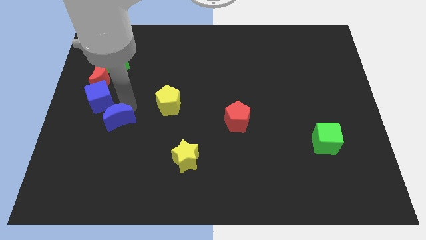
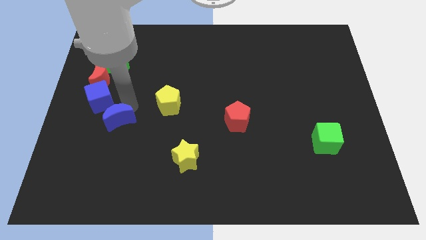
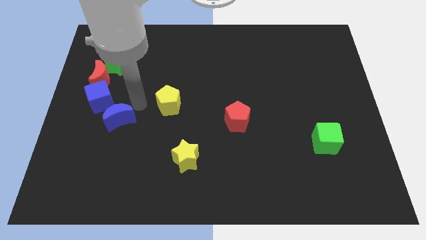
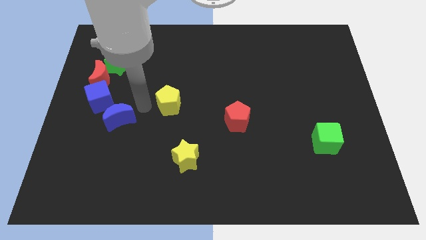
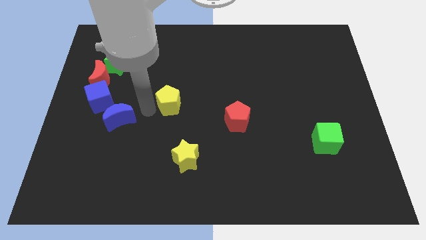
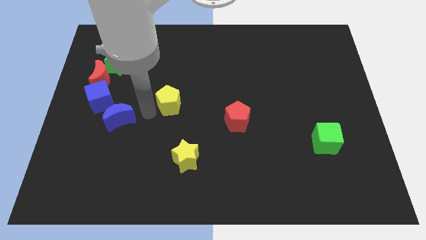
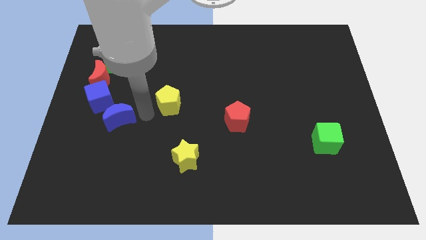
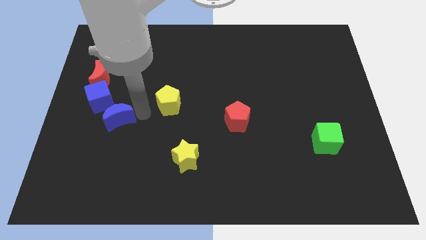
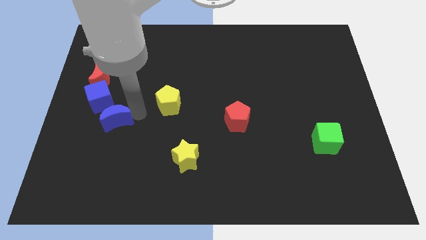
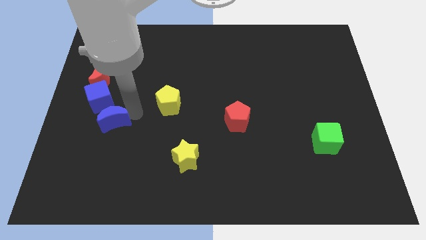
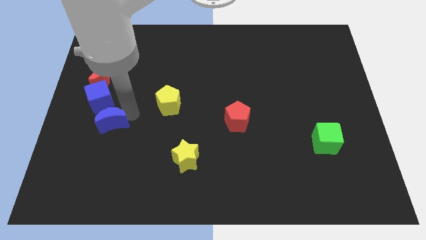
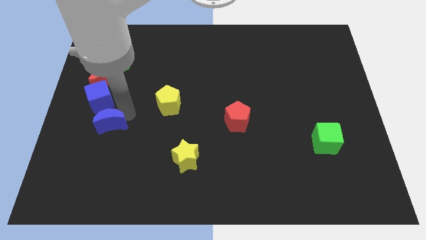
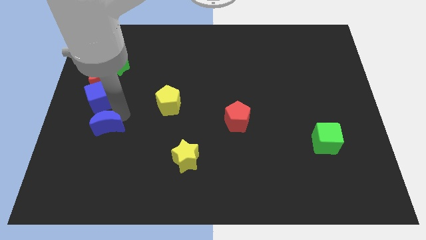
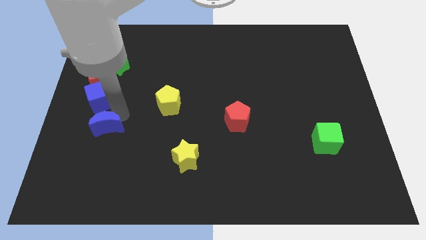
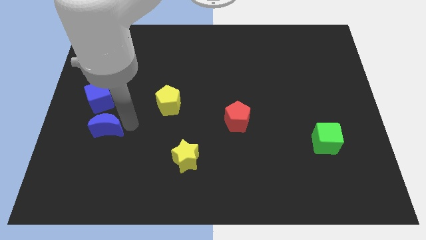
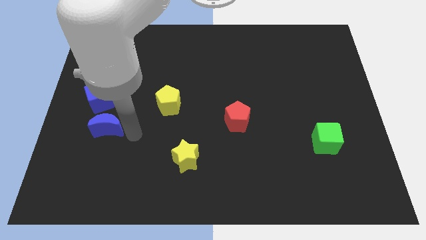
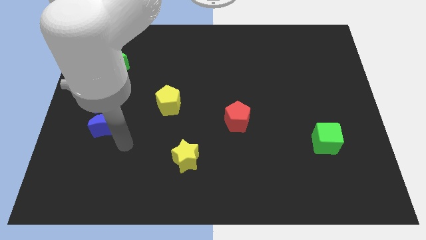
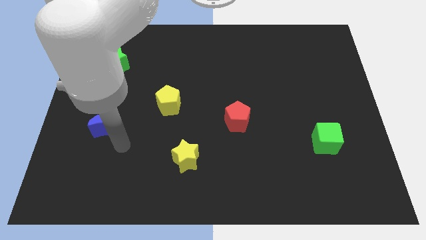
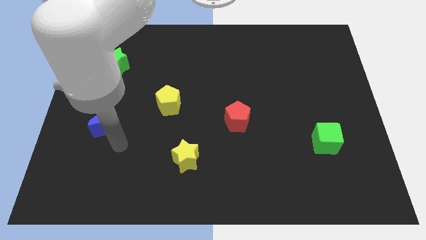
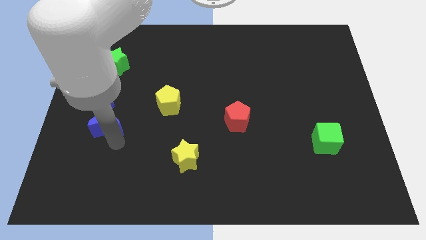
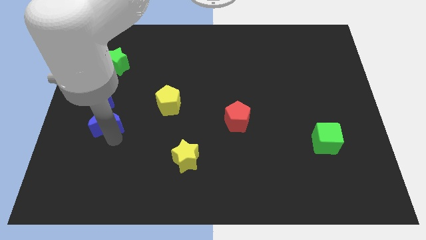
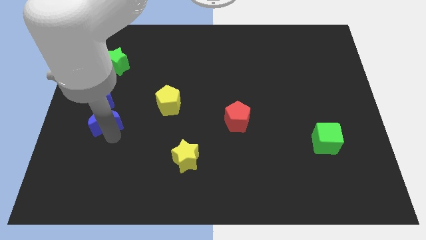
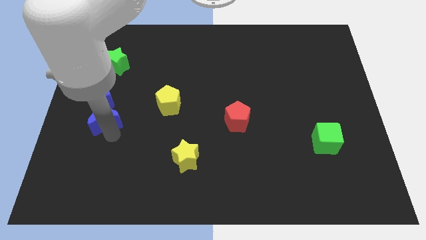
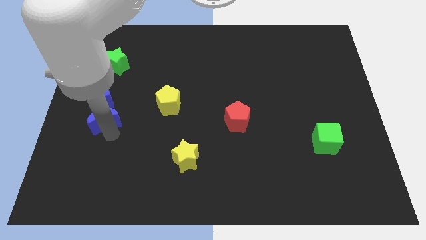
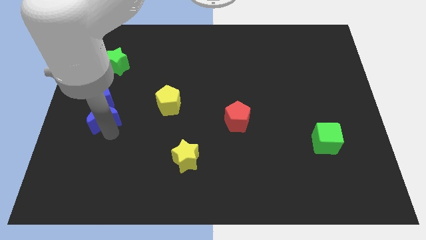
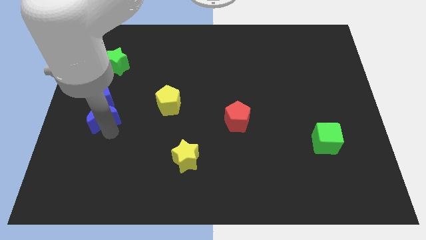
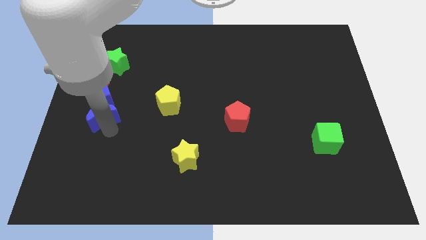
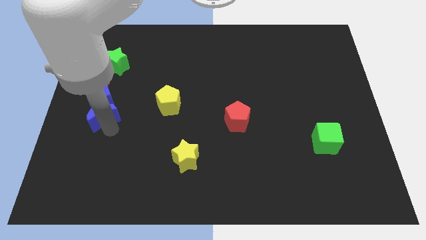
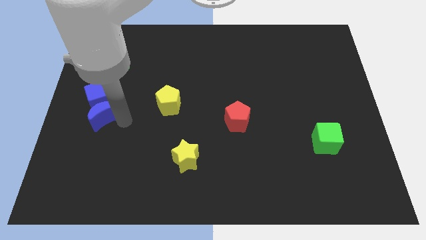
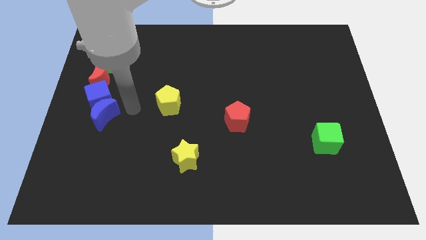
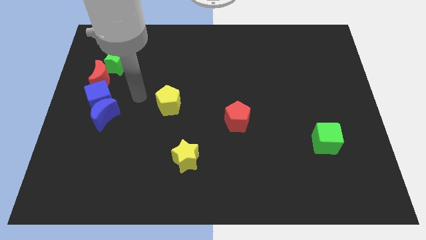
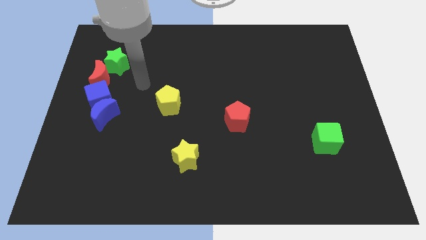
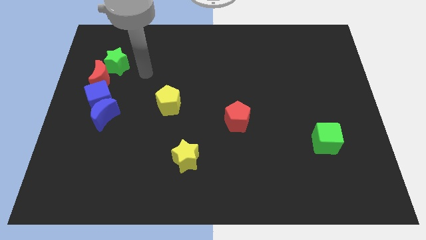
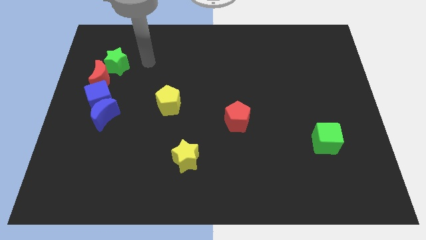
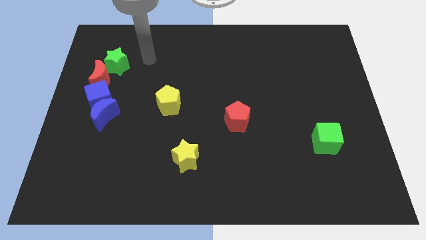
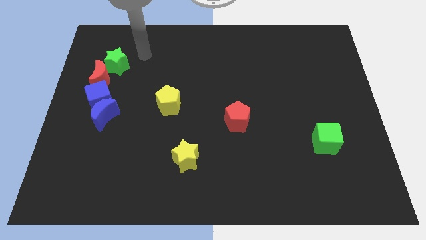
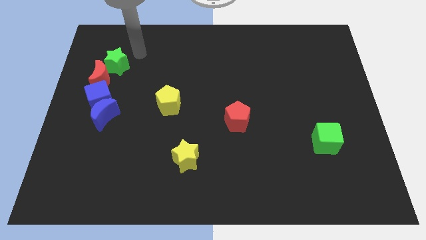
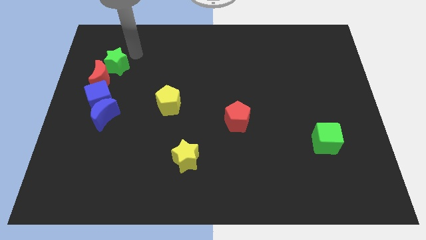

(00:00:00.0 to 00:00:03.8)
adjust the blue crescent to the bottom of the blue cube and go away

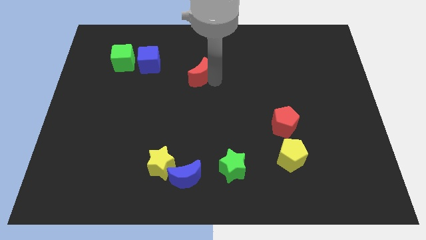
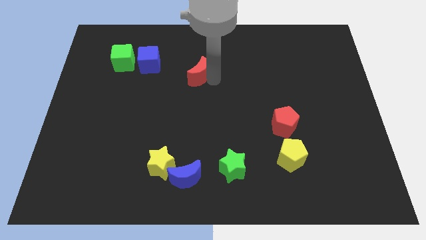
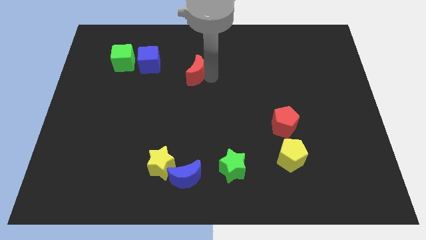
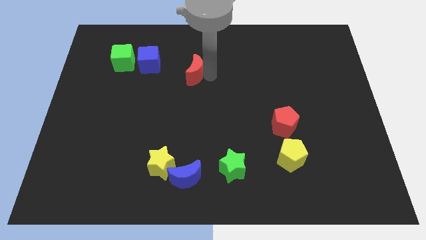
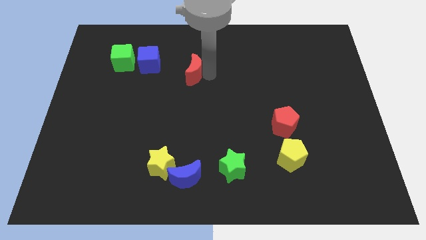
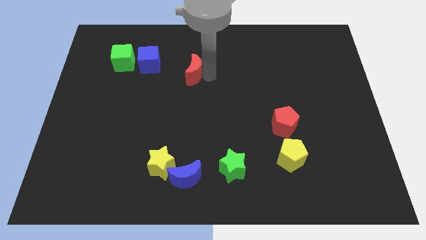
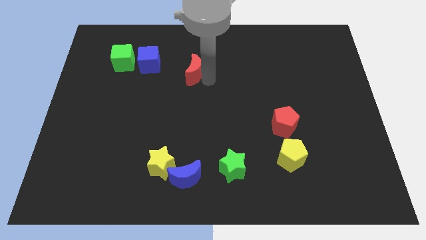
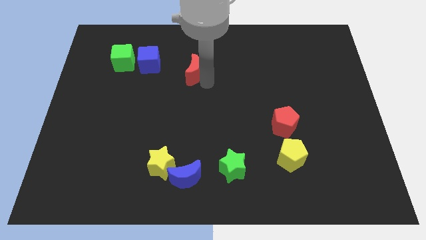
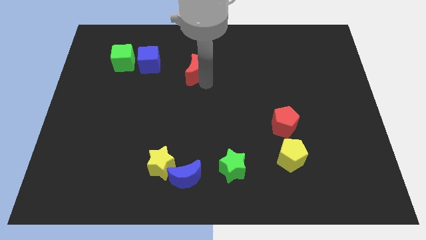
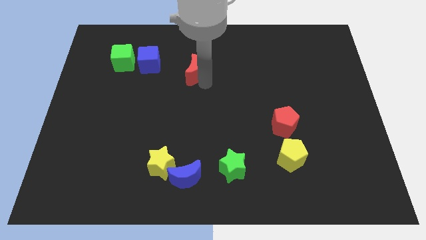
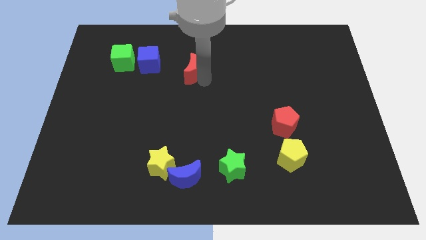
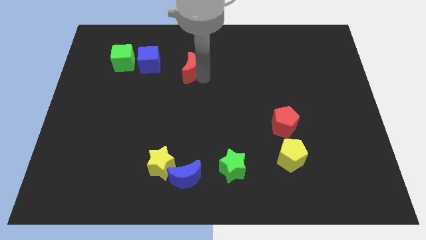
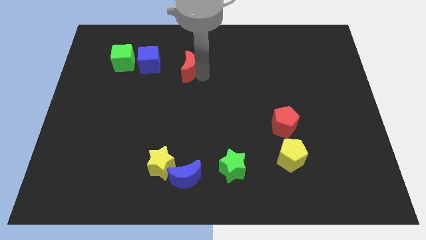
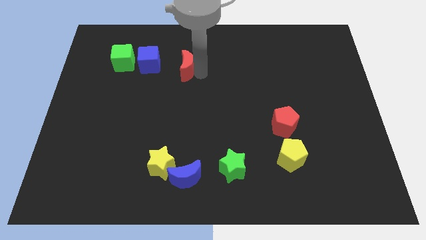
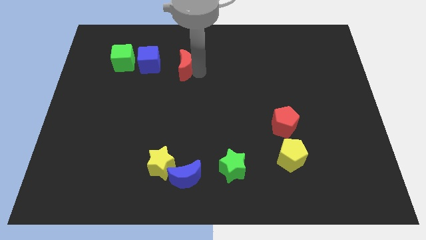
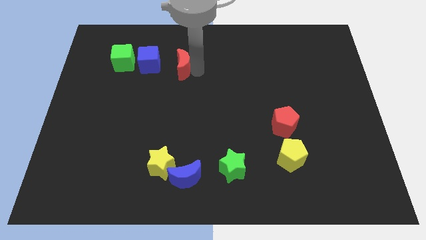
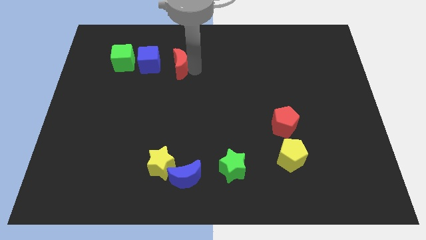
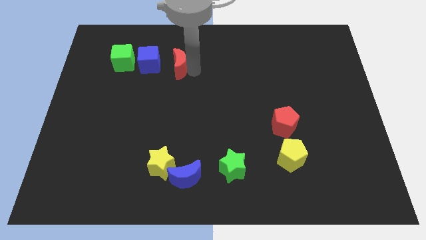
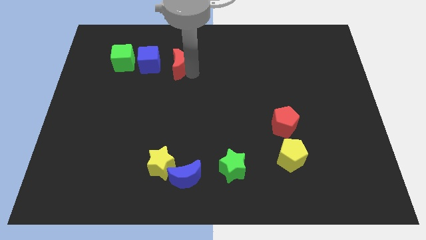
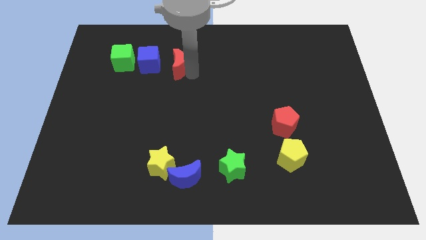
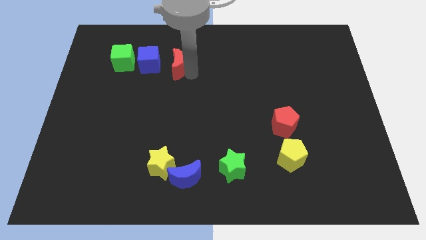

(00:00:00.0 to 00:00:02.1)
place red moon to the right of blue cube

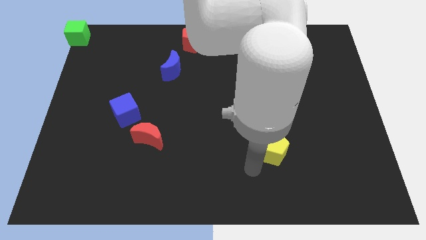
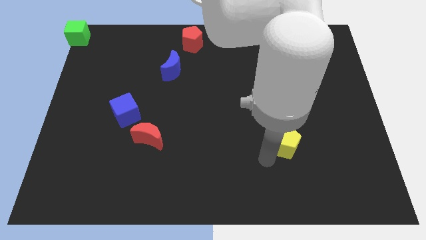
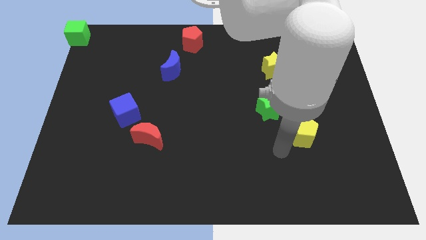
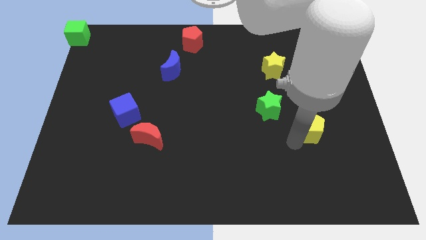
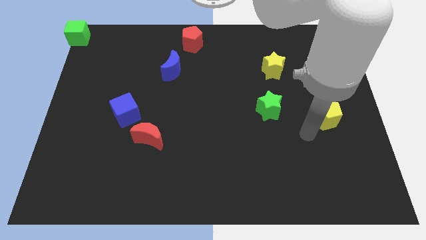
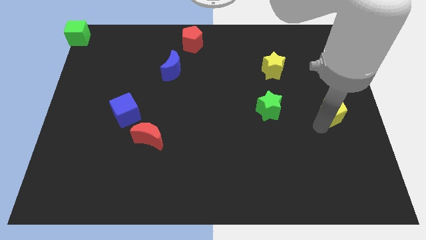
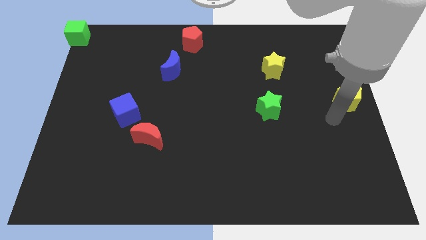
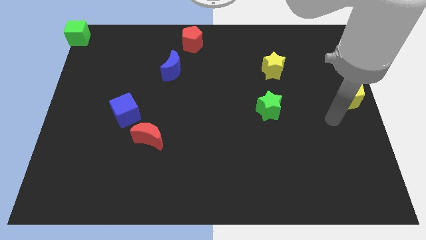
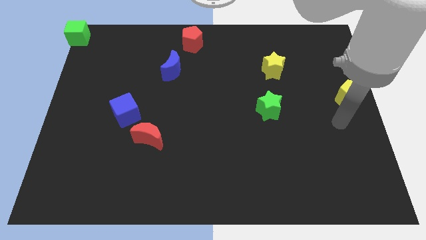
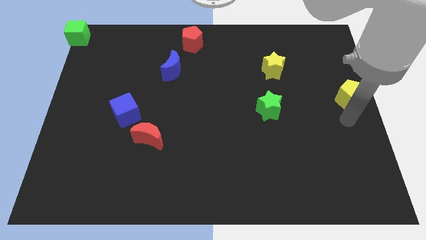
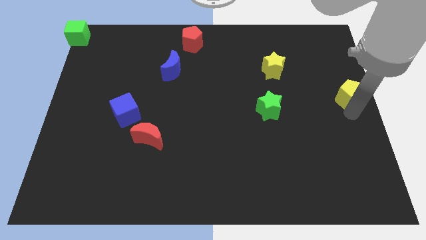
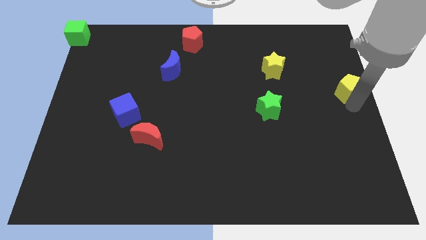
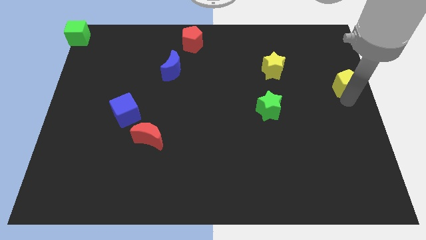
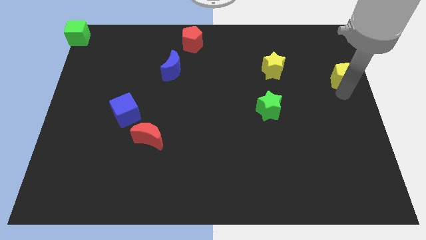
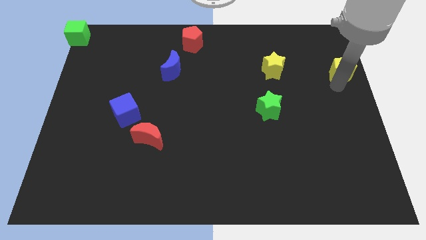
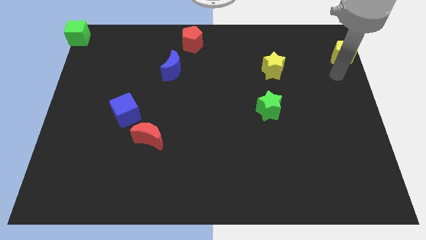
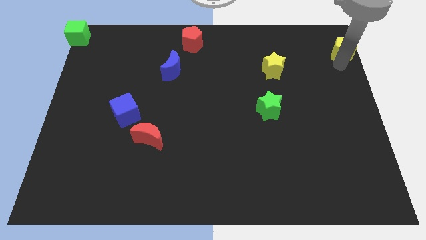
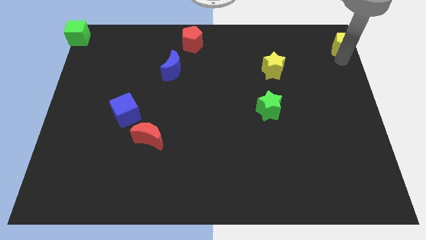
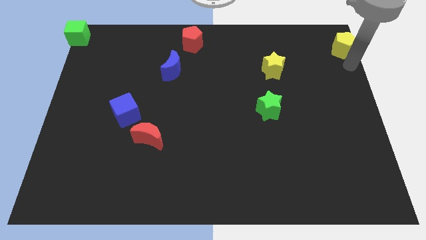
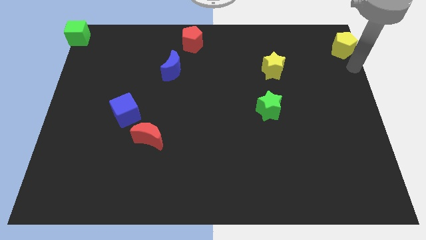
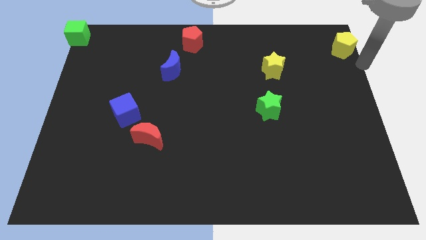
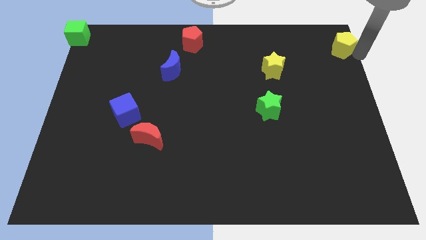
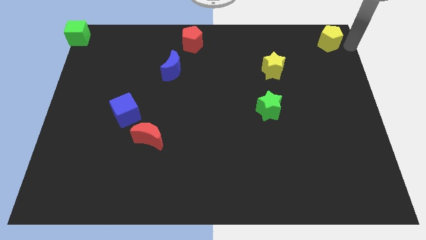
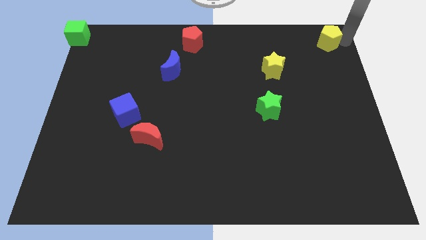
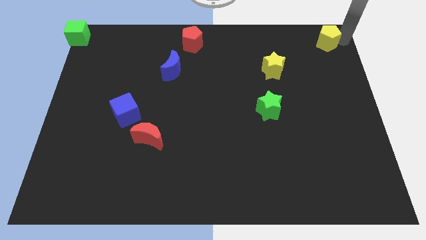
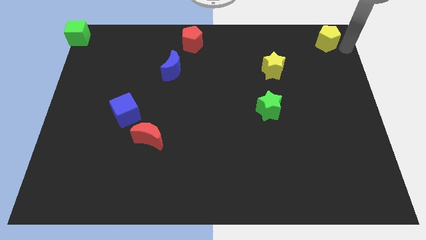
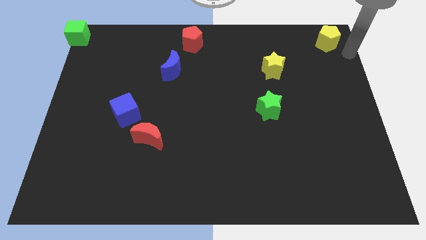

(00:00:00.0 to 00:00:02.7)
place the yellow pentagon to the top right of the board

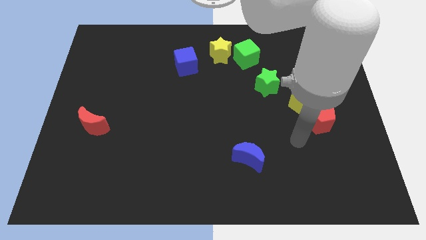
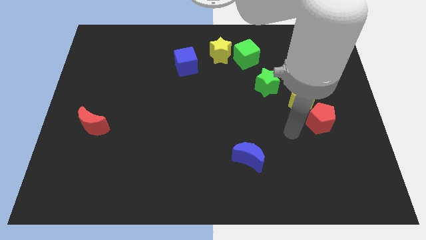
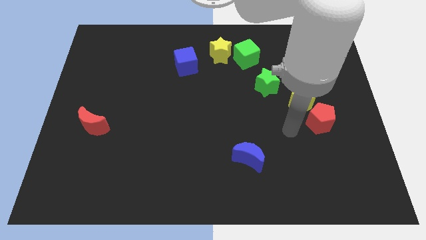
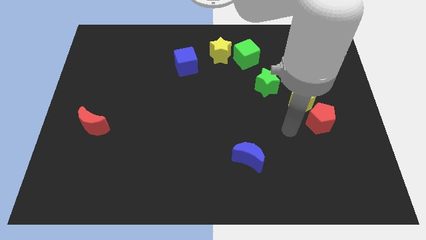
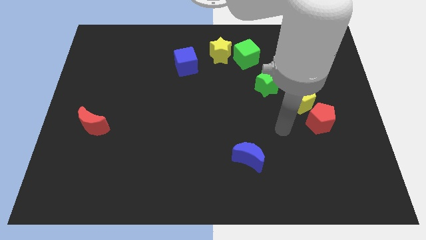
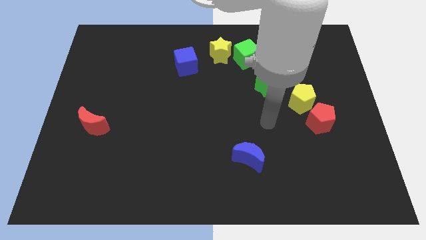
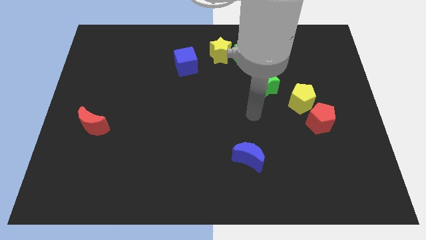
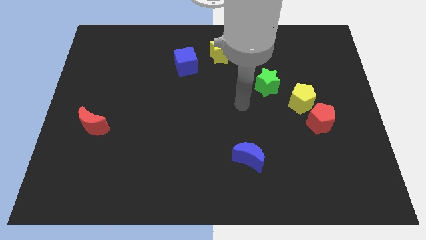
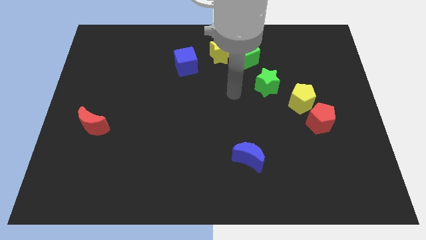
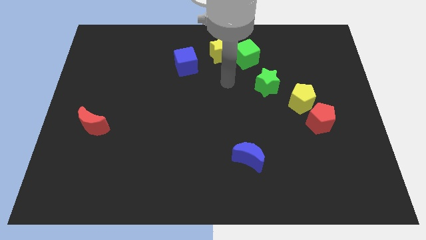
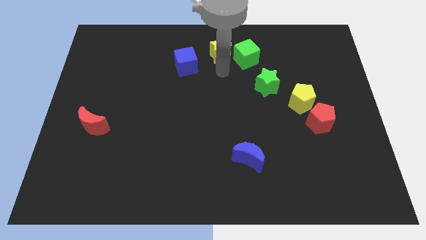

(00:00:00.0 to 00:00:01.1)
move the arm below the yellow star
